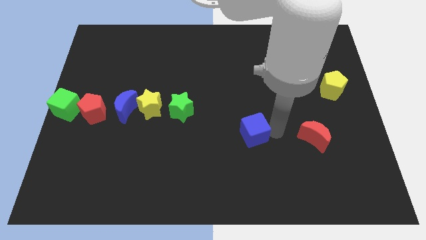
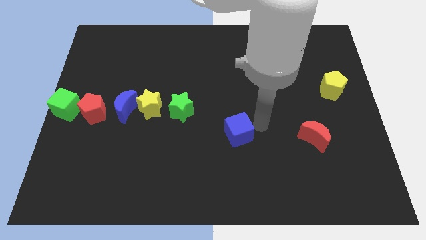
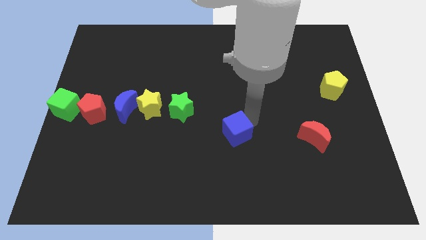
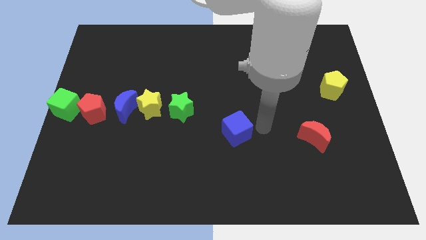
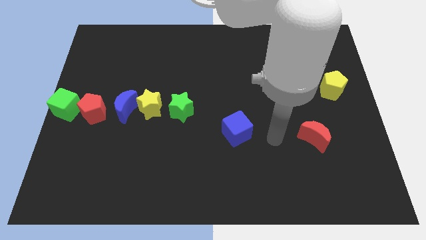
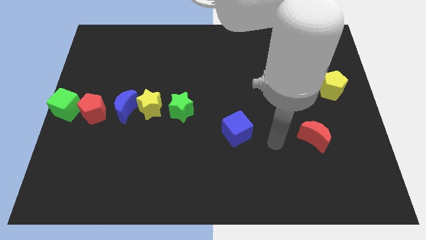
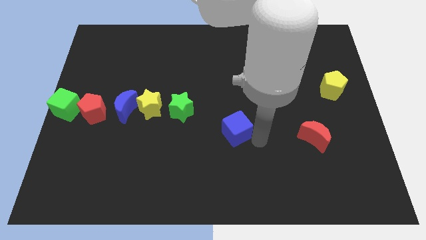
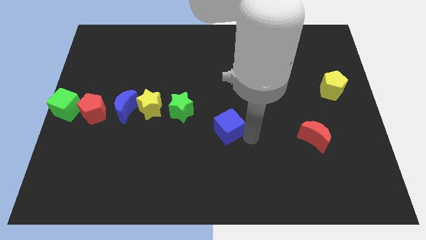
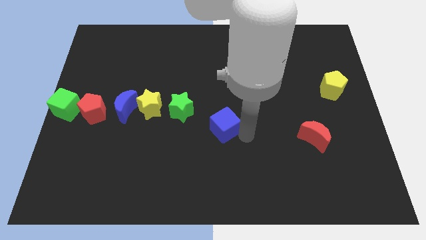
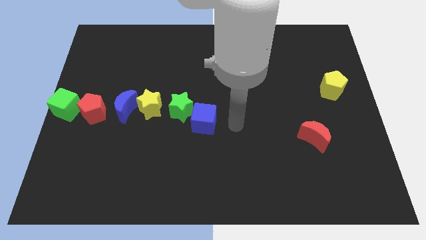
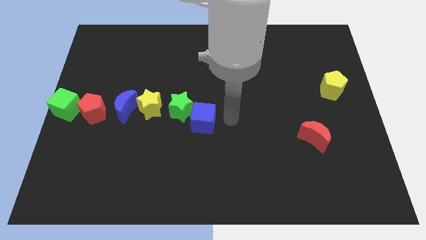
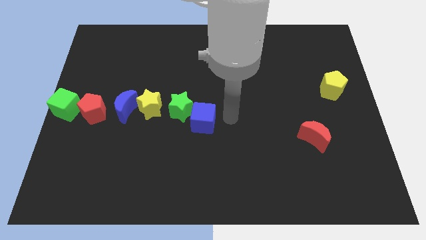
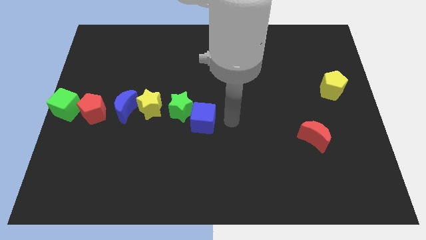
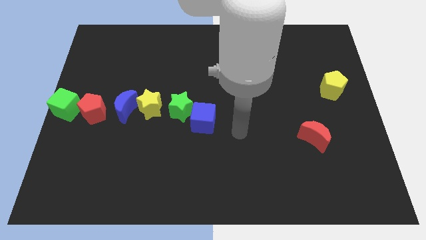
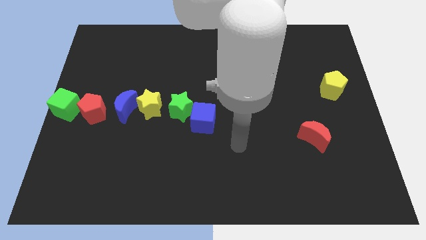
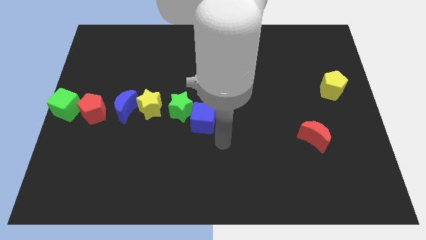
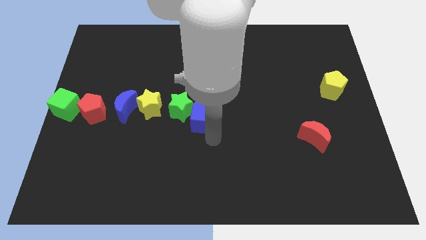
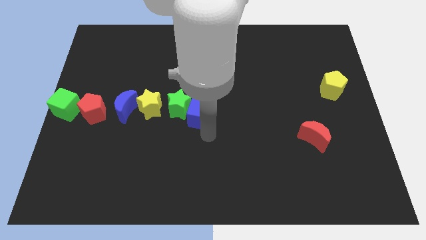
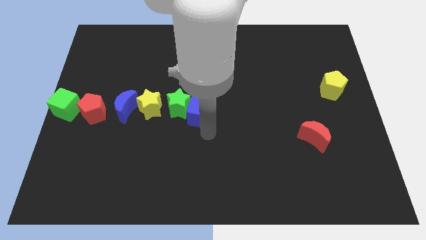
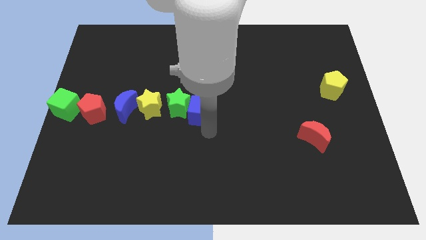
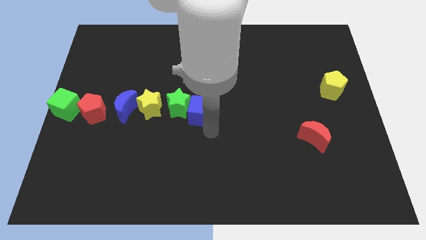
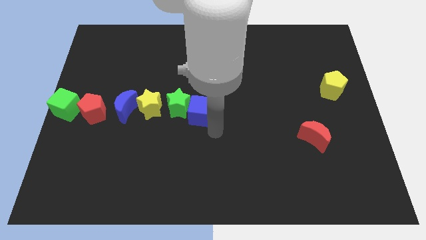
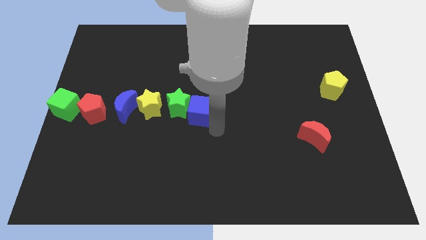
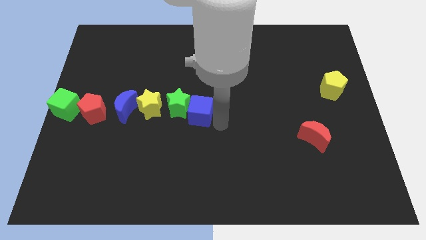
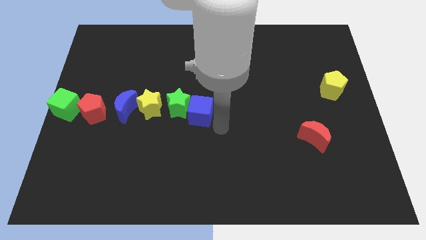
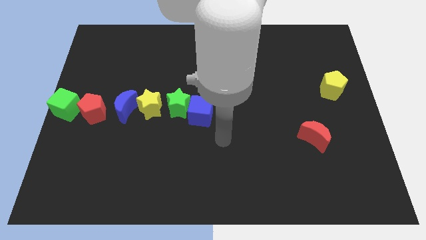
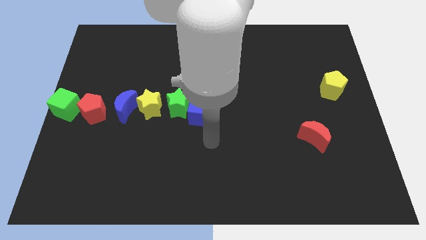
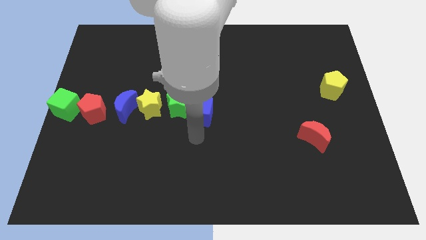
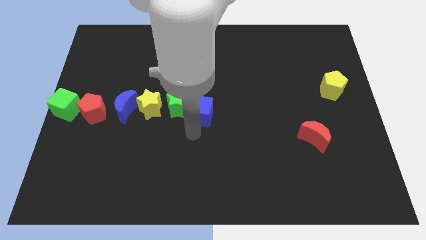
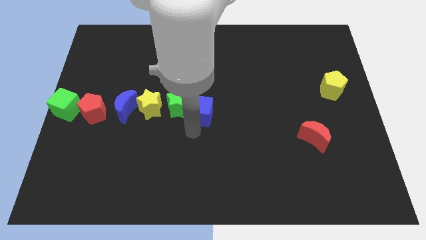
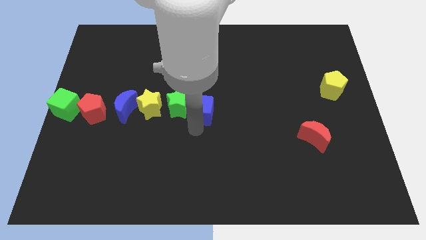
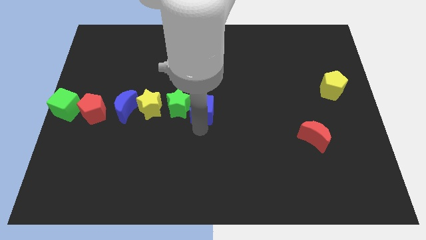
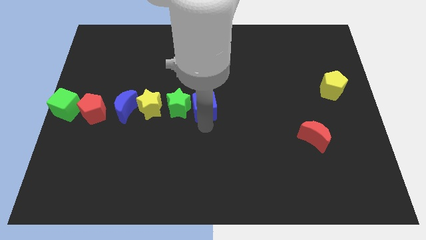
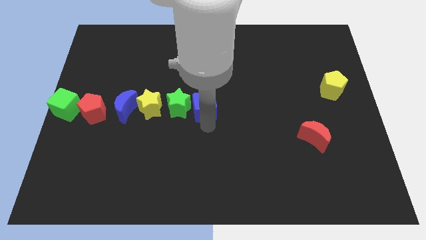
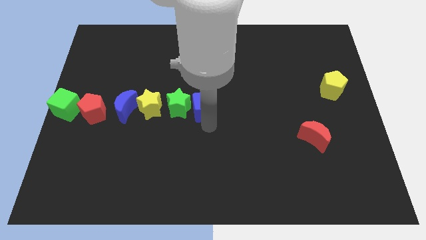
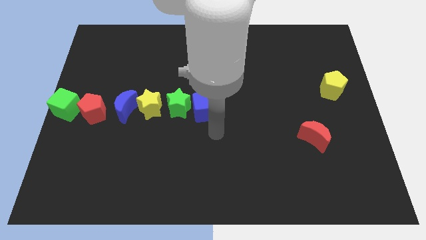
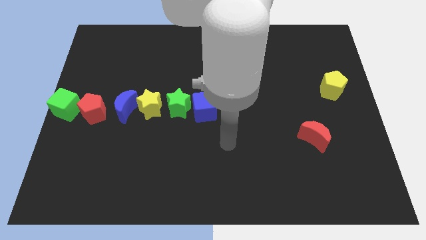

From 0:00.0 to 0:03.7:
place the blue cube to the right of the green star

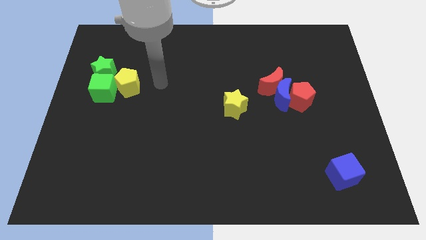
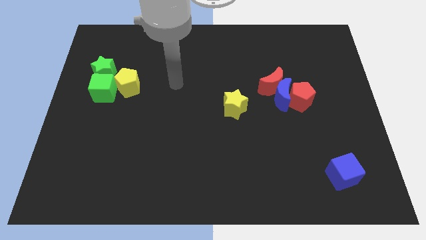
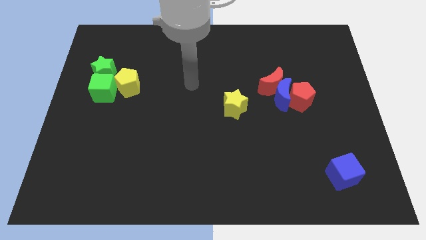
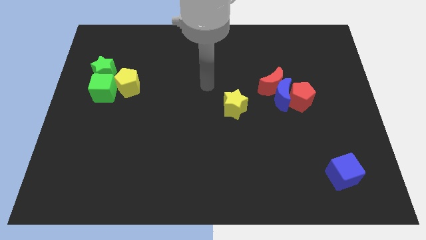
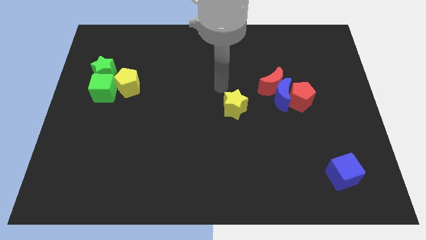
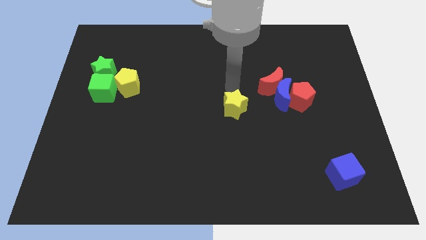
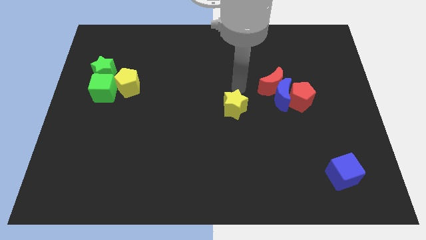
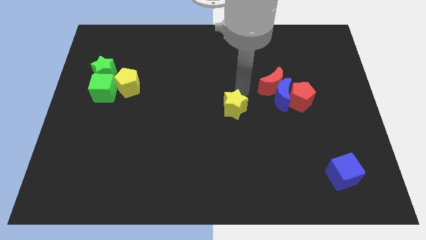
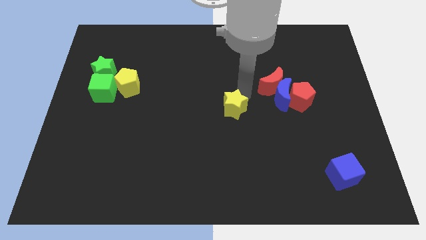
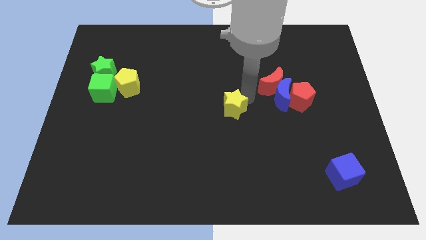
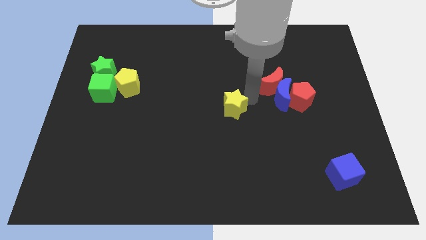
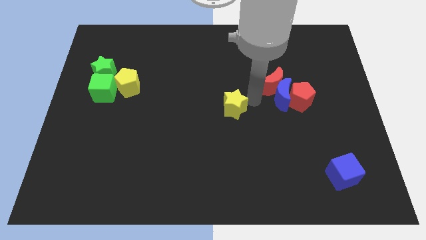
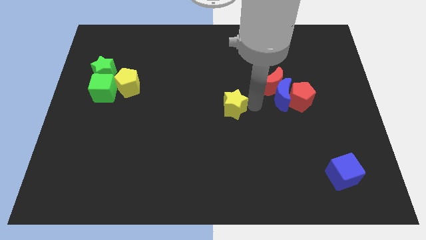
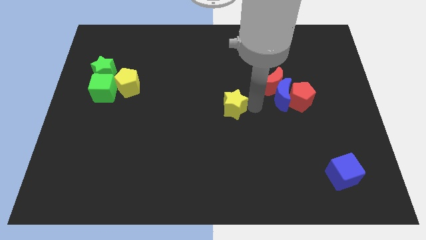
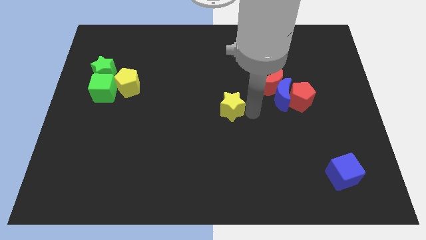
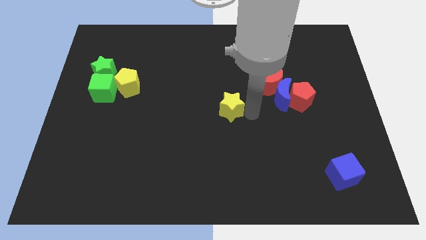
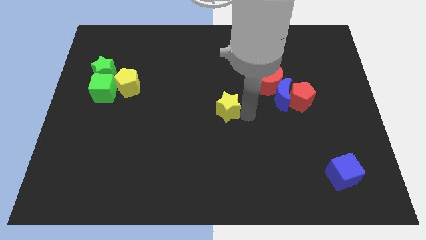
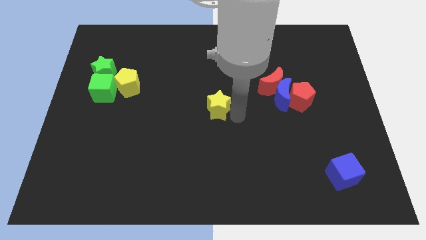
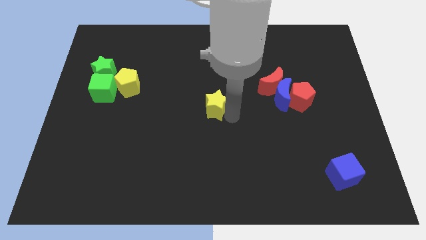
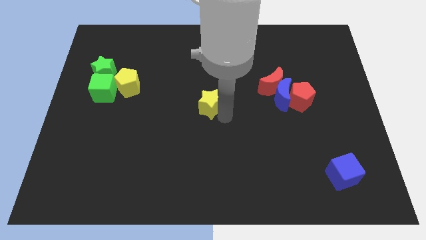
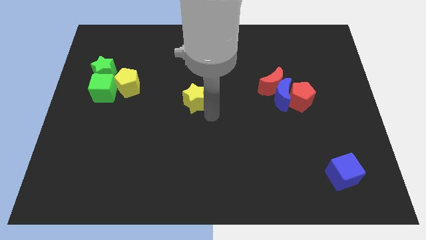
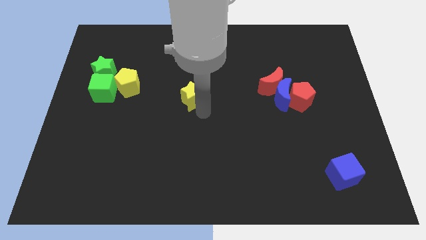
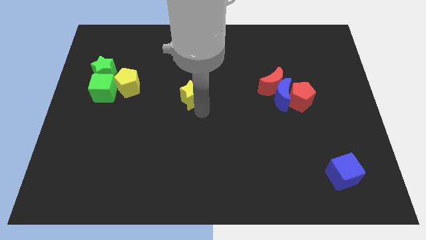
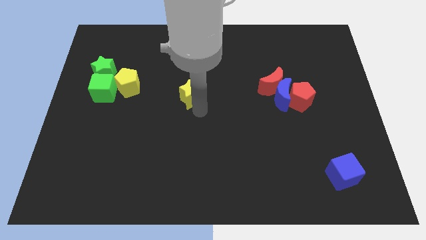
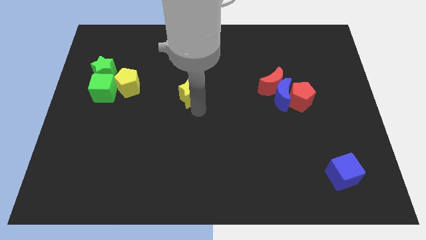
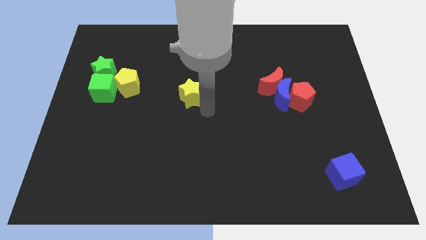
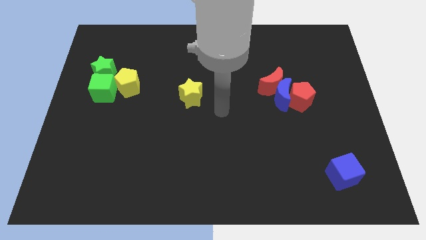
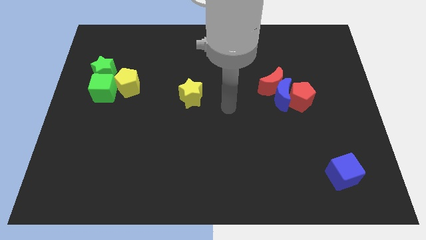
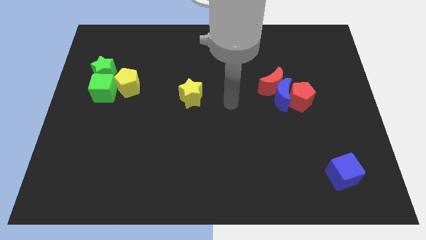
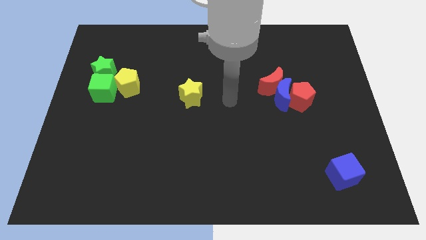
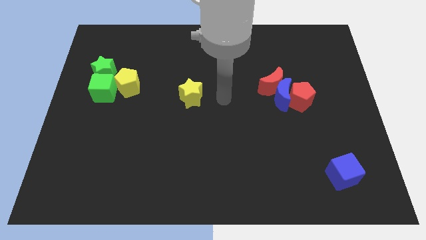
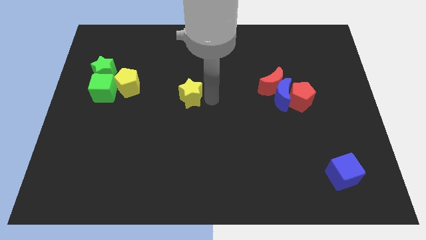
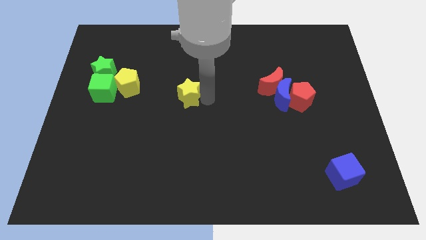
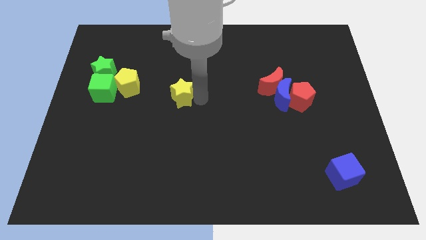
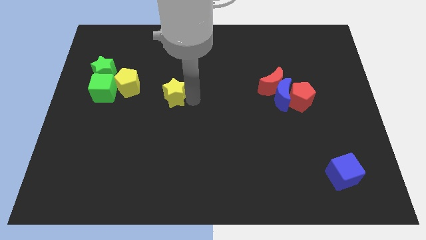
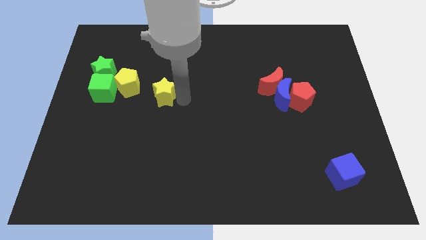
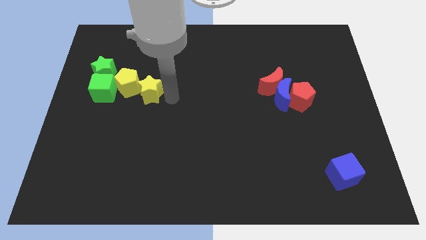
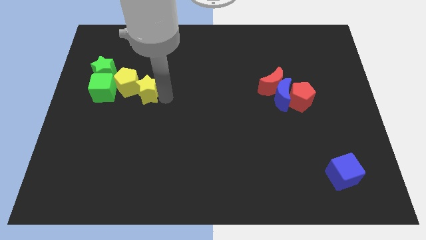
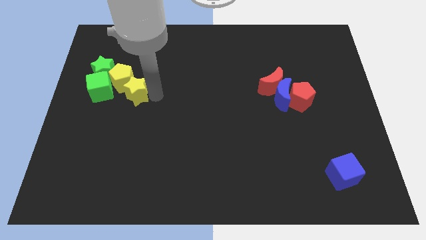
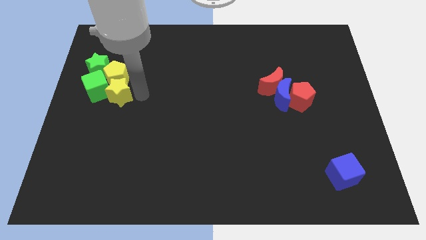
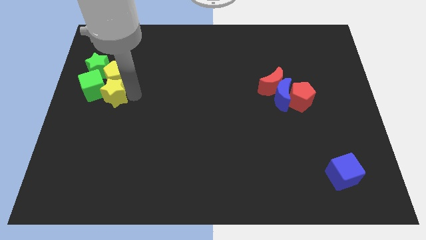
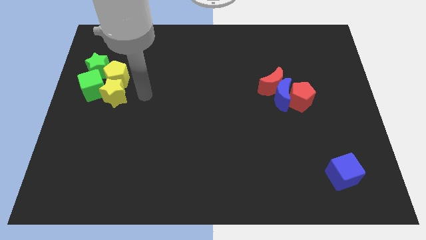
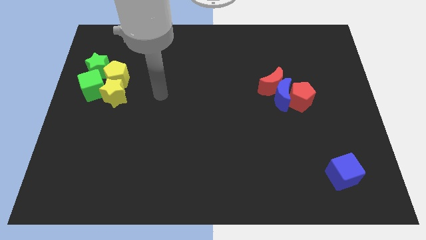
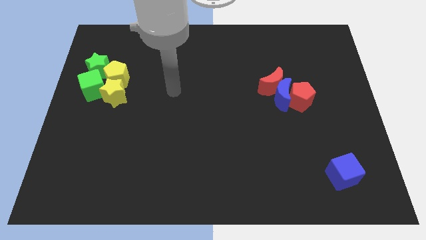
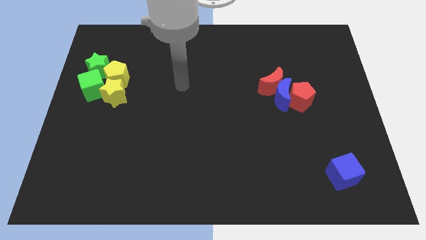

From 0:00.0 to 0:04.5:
place the yellow star below the yellow pentagon

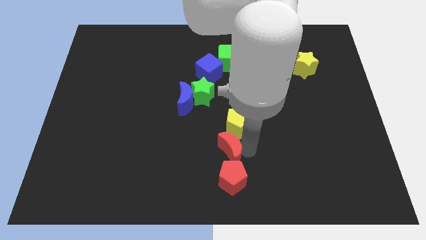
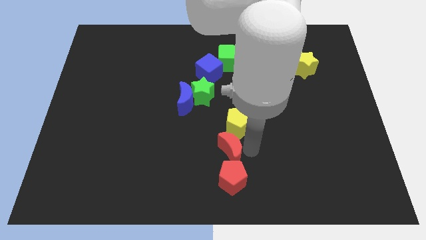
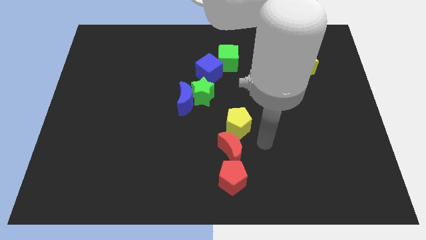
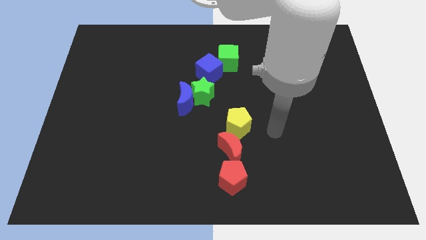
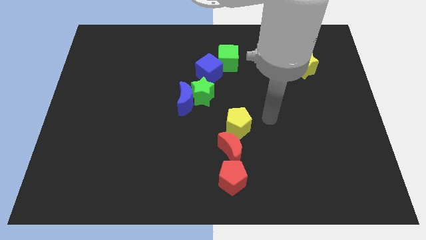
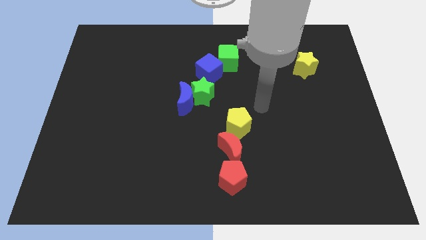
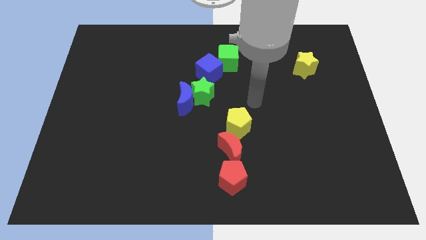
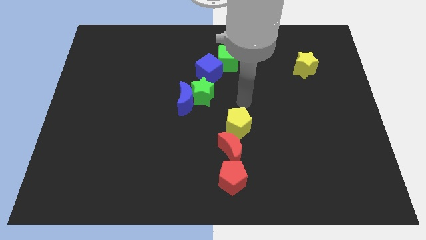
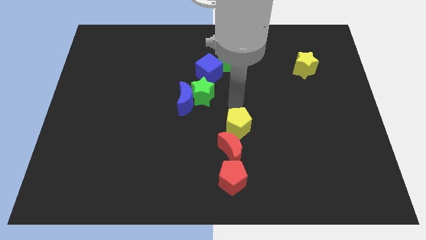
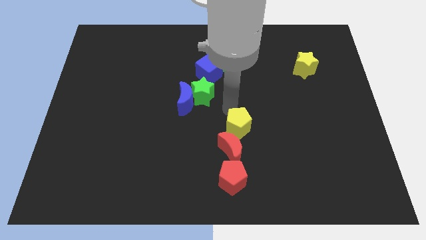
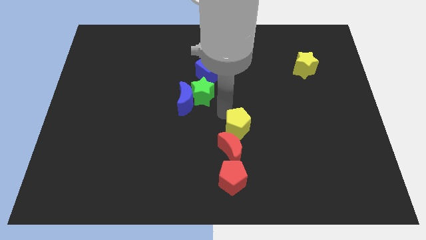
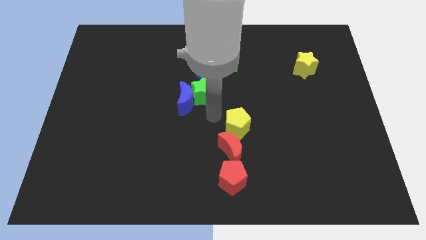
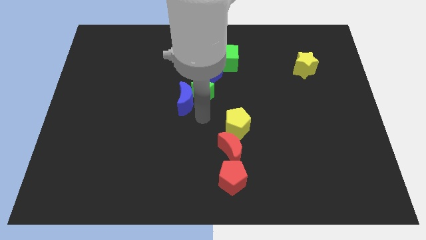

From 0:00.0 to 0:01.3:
point your arm at the bottom of the green star
